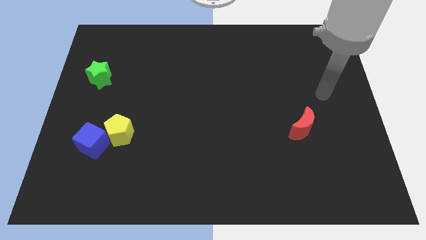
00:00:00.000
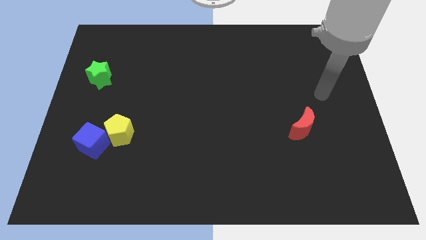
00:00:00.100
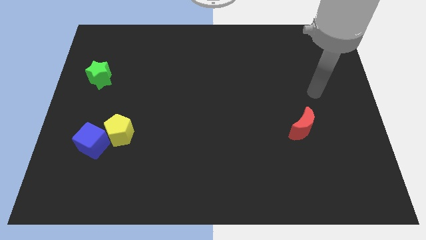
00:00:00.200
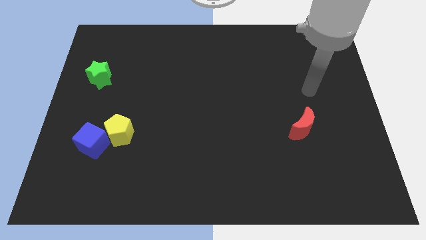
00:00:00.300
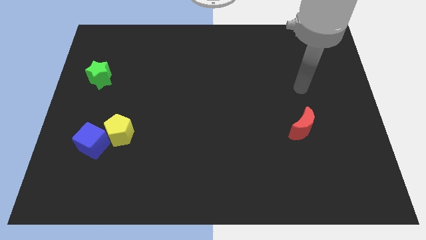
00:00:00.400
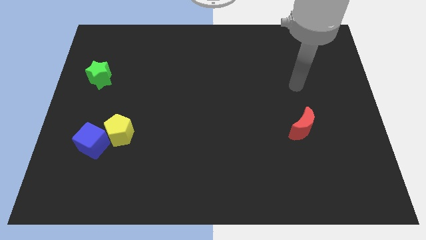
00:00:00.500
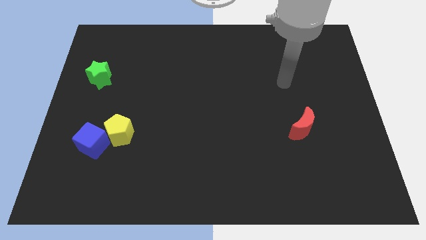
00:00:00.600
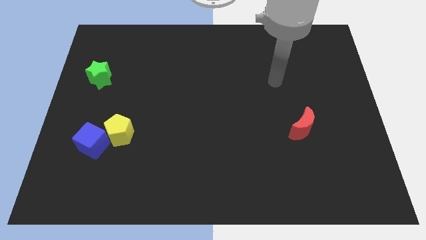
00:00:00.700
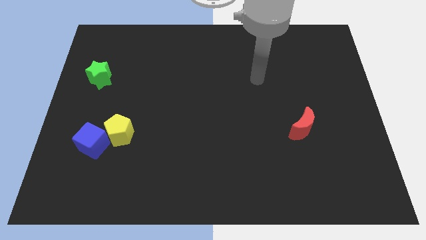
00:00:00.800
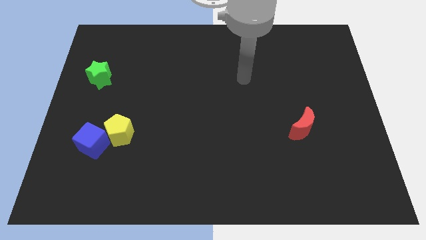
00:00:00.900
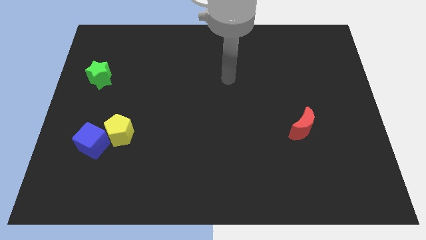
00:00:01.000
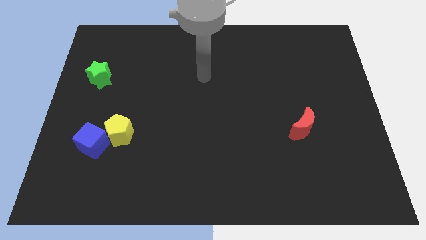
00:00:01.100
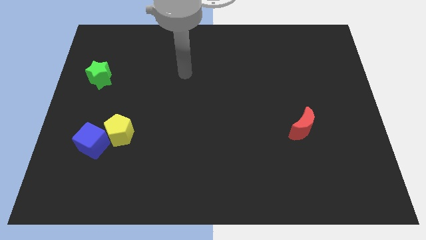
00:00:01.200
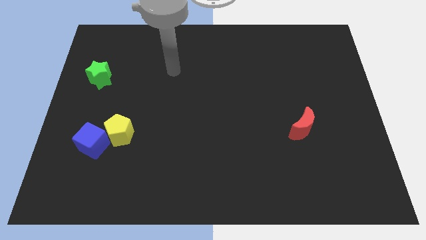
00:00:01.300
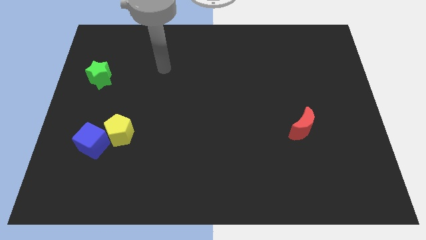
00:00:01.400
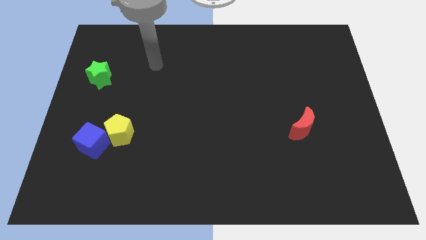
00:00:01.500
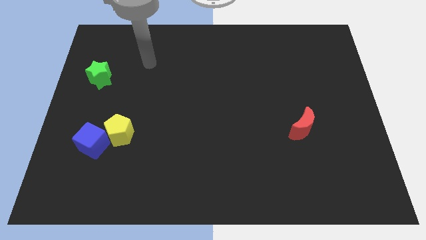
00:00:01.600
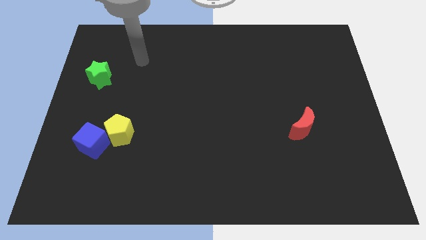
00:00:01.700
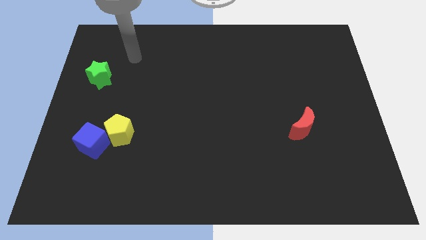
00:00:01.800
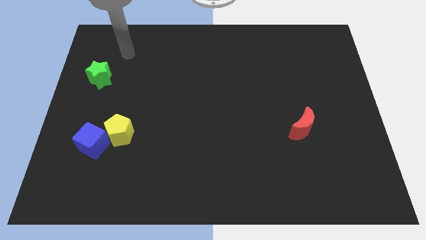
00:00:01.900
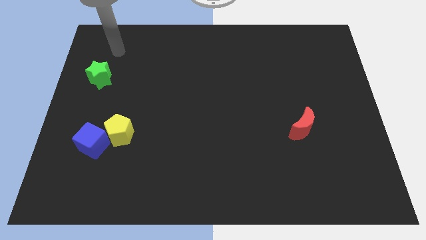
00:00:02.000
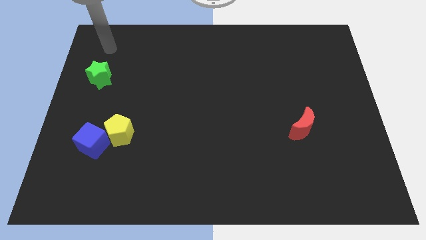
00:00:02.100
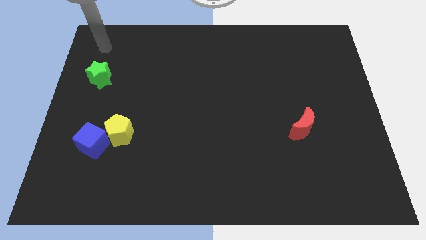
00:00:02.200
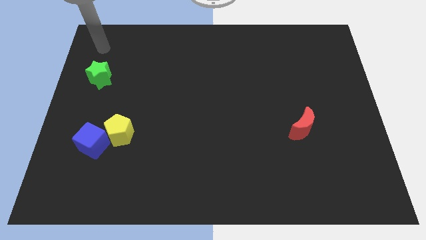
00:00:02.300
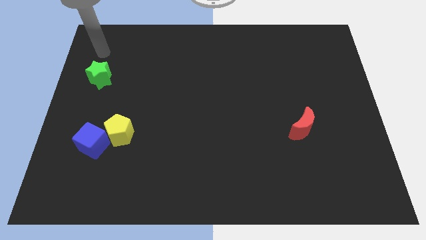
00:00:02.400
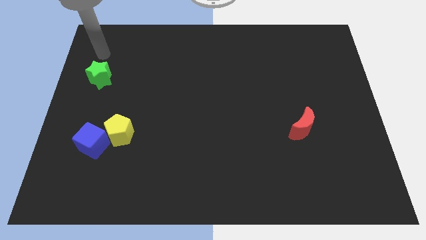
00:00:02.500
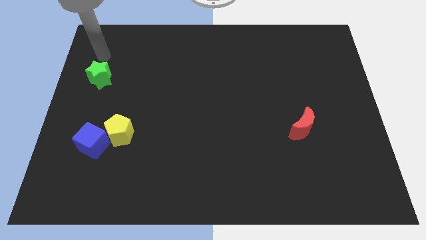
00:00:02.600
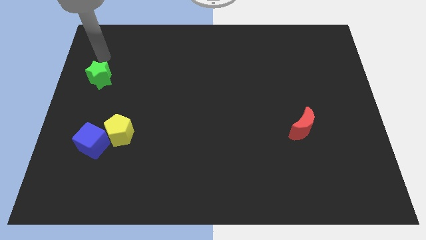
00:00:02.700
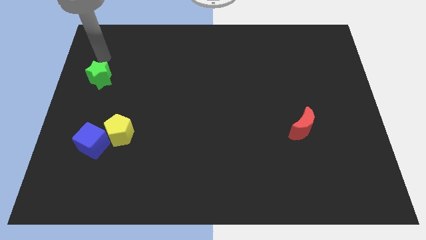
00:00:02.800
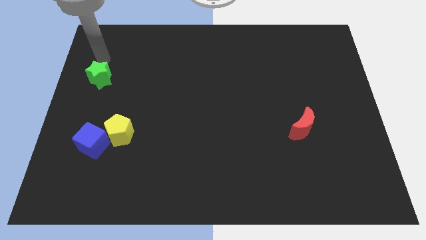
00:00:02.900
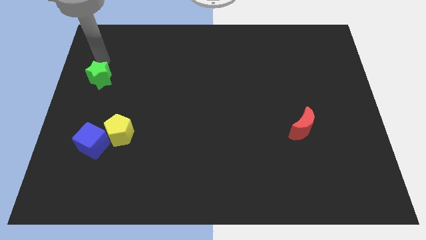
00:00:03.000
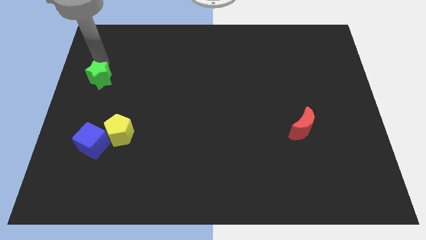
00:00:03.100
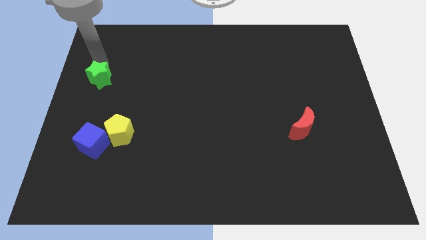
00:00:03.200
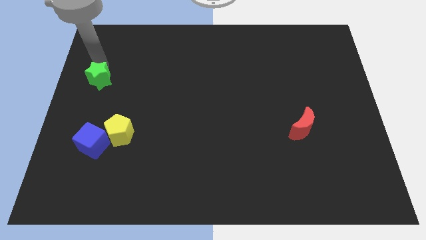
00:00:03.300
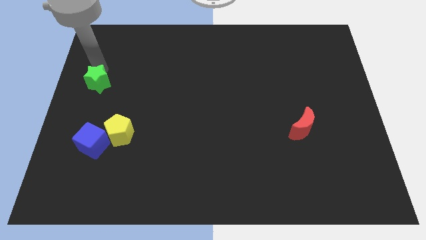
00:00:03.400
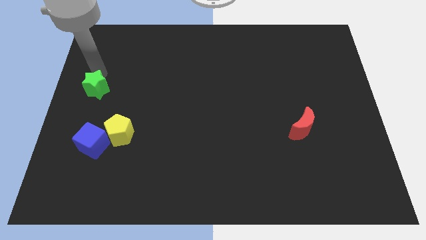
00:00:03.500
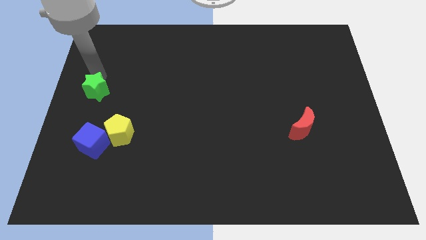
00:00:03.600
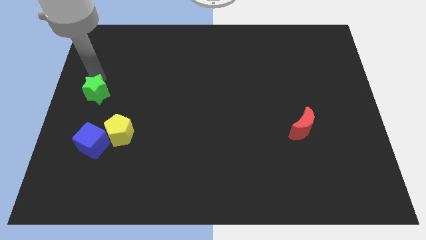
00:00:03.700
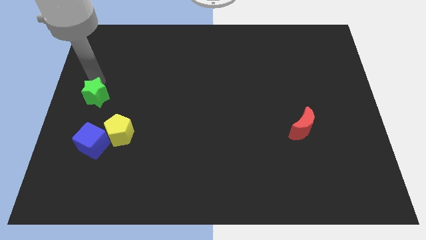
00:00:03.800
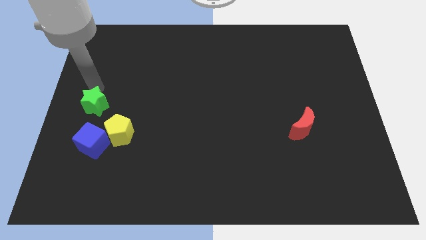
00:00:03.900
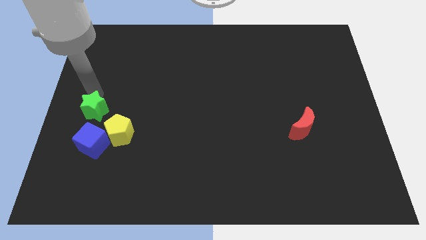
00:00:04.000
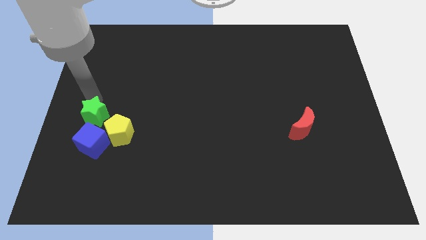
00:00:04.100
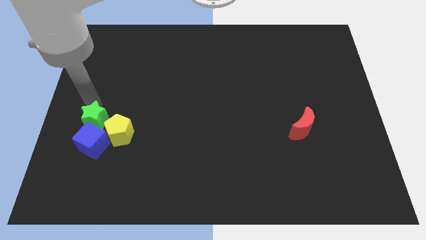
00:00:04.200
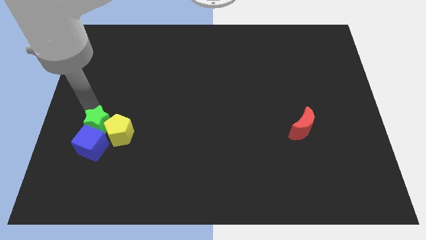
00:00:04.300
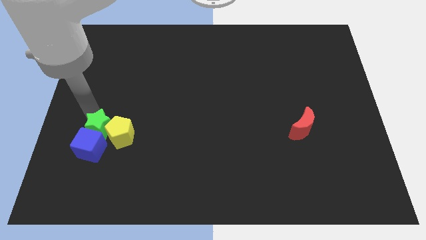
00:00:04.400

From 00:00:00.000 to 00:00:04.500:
move the green star towards the cube

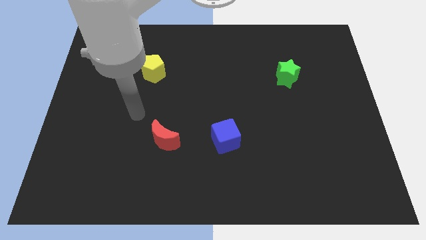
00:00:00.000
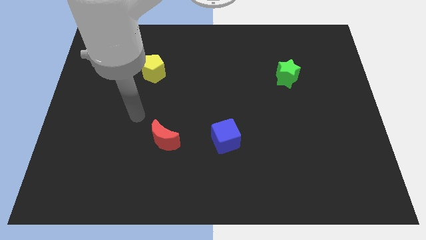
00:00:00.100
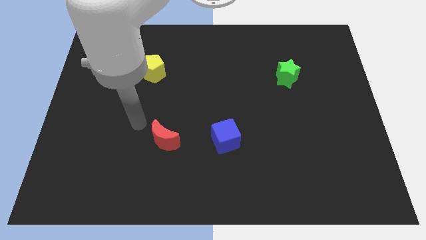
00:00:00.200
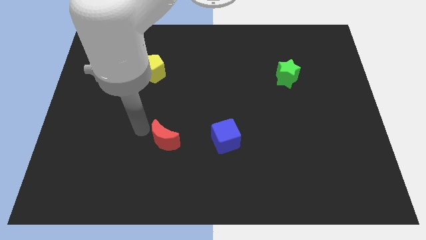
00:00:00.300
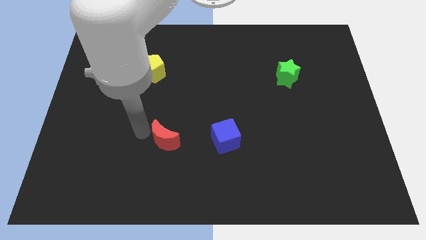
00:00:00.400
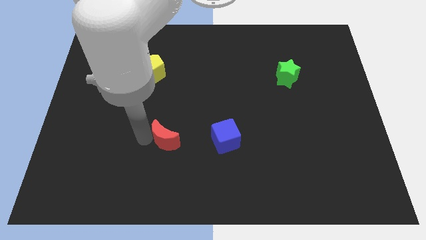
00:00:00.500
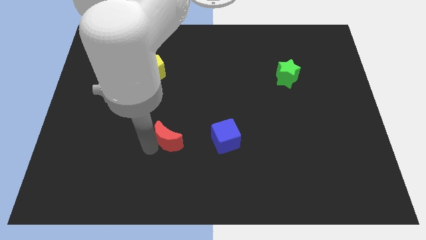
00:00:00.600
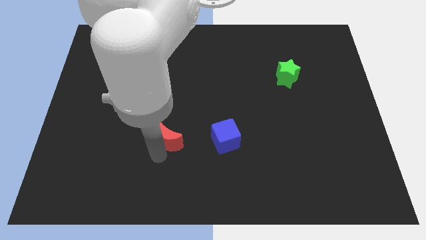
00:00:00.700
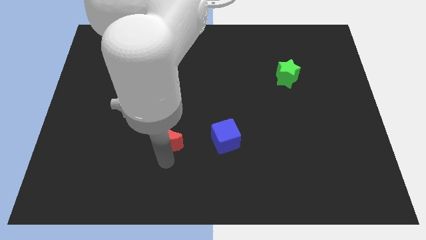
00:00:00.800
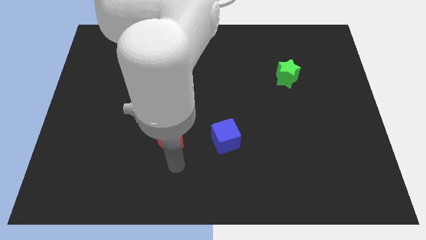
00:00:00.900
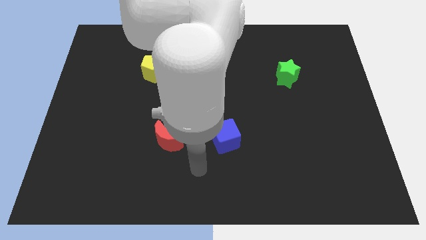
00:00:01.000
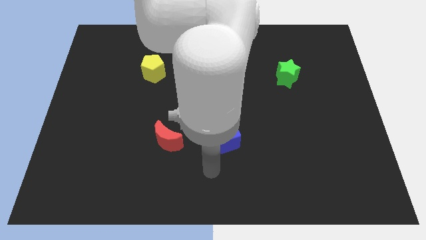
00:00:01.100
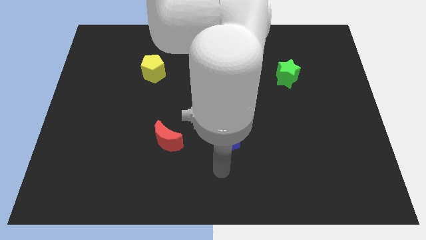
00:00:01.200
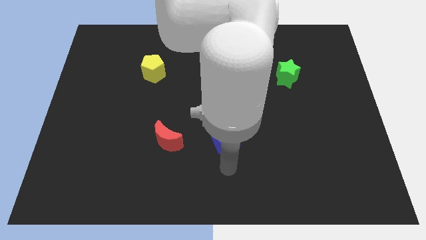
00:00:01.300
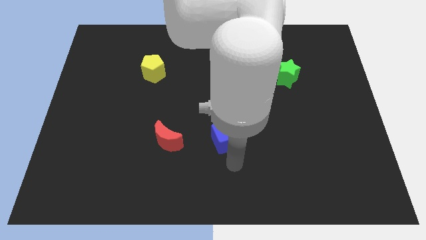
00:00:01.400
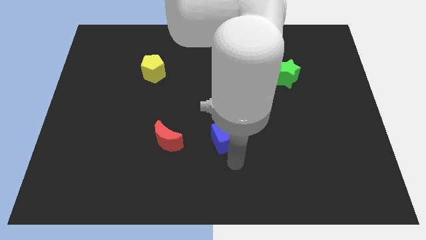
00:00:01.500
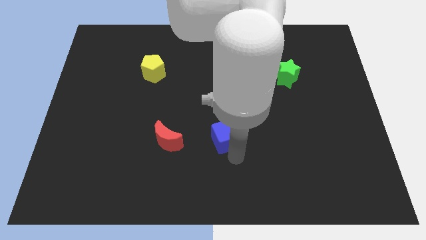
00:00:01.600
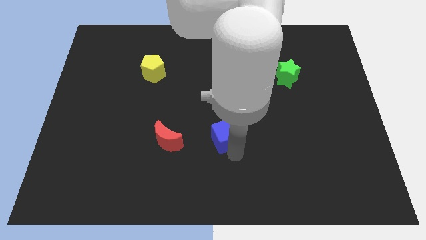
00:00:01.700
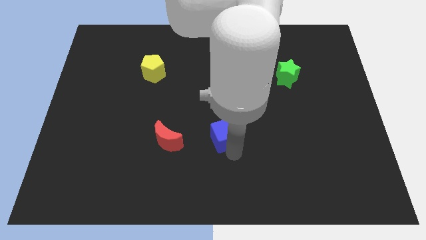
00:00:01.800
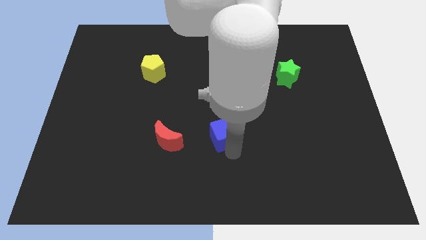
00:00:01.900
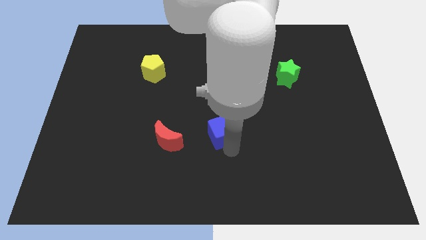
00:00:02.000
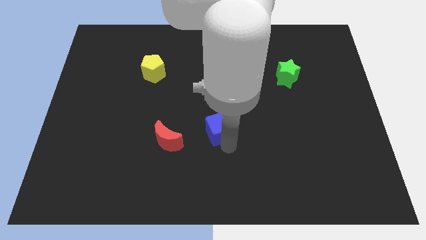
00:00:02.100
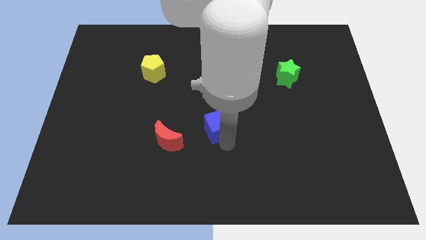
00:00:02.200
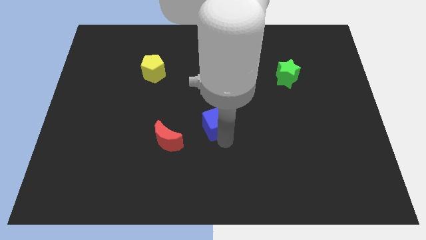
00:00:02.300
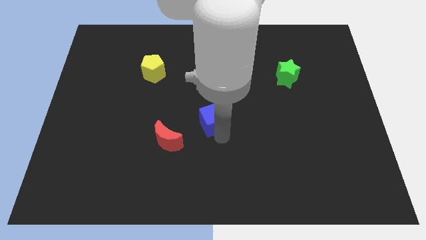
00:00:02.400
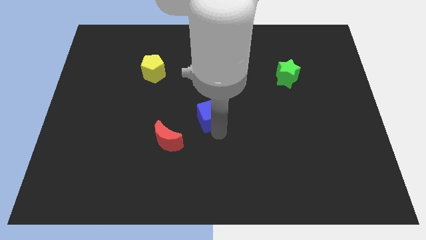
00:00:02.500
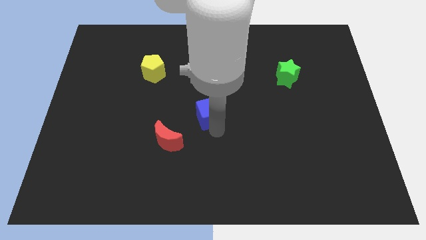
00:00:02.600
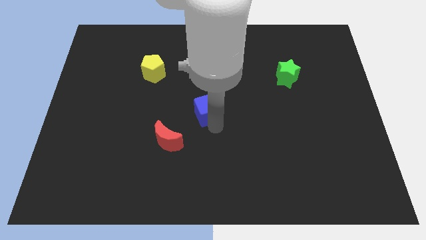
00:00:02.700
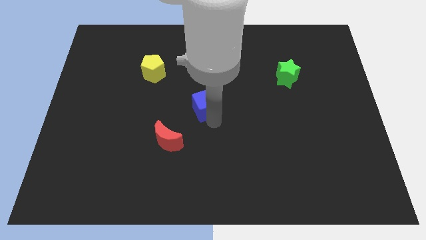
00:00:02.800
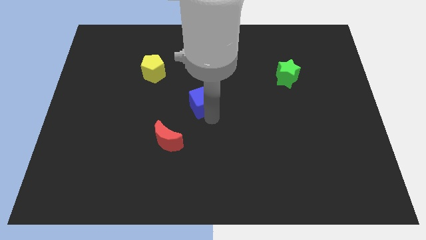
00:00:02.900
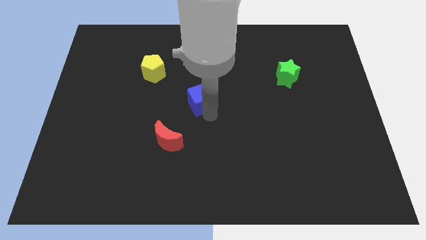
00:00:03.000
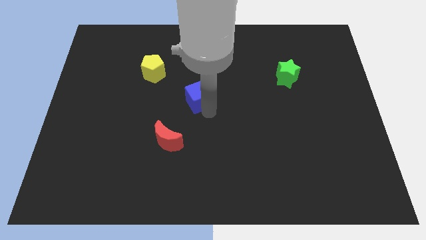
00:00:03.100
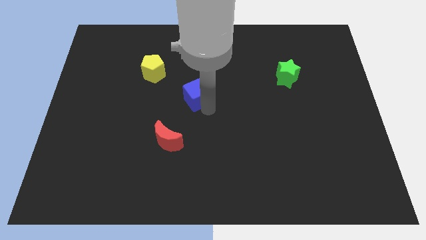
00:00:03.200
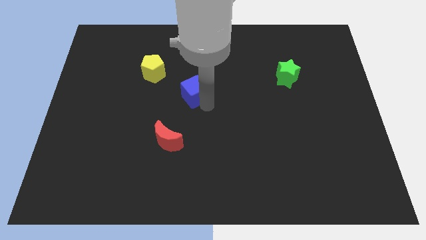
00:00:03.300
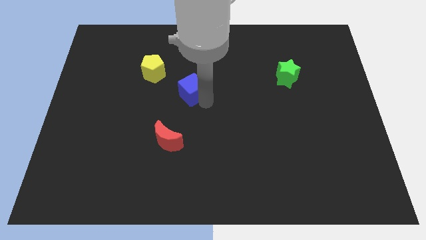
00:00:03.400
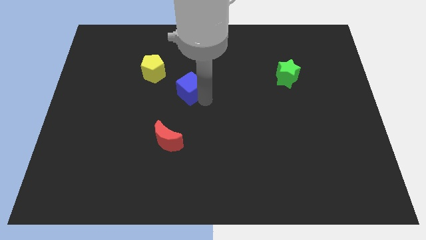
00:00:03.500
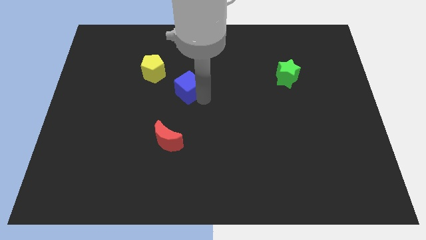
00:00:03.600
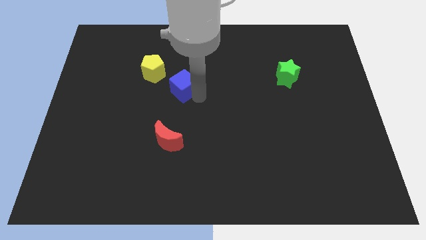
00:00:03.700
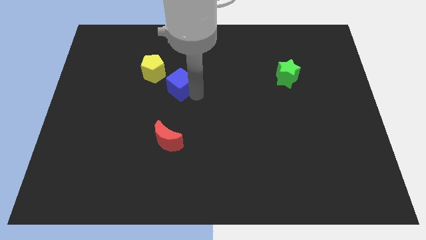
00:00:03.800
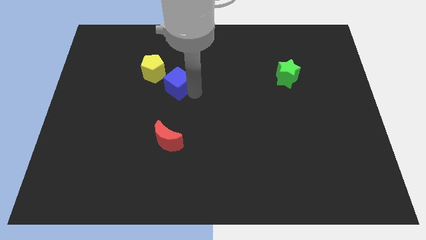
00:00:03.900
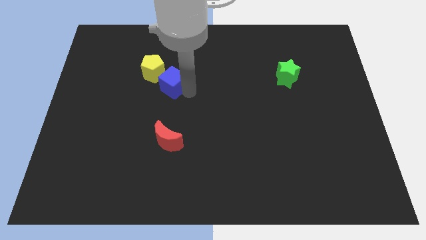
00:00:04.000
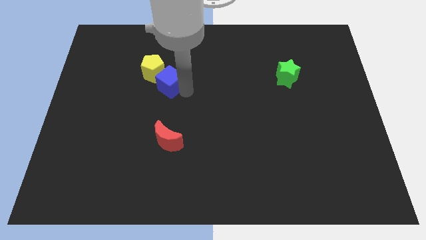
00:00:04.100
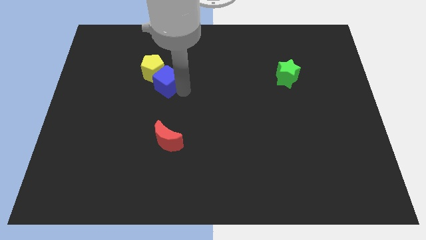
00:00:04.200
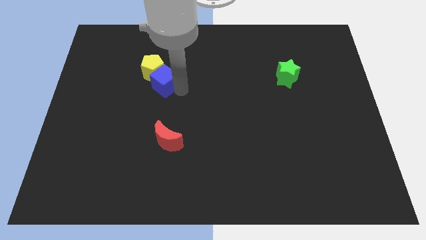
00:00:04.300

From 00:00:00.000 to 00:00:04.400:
put the cube to the pentagon
